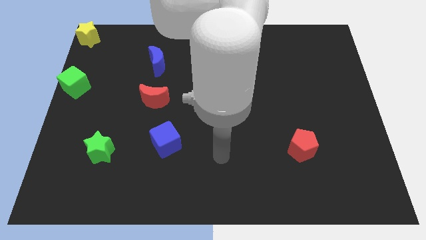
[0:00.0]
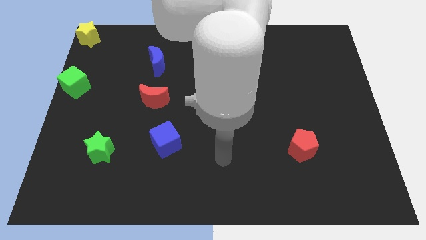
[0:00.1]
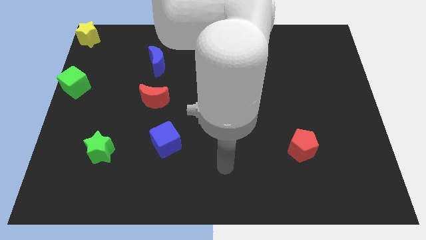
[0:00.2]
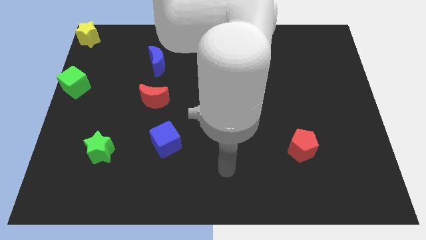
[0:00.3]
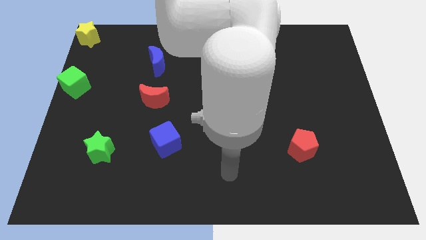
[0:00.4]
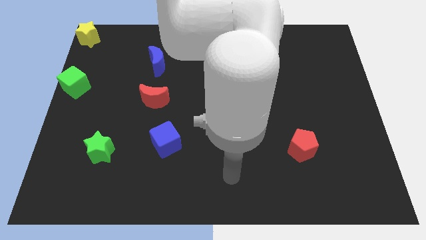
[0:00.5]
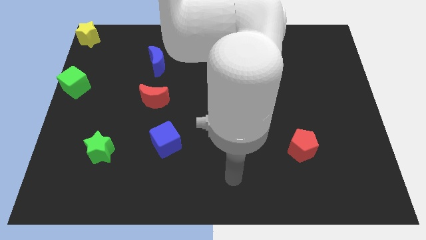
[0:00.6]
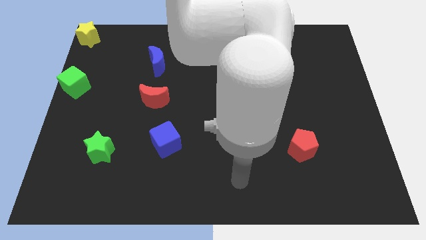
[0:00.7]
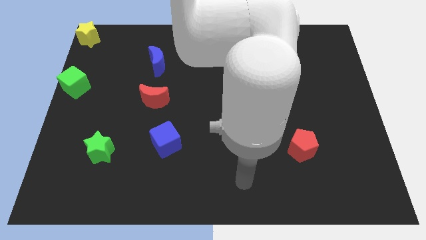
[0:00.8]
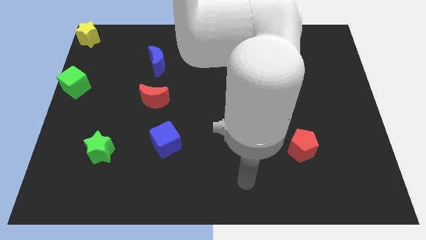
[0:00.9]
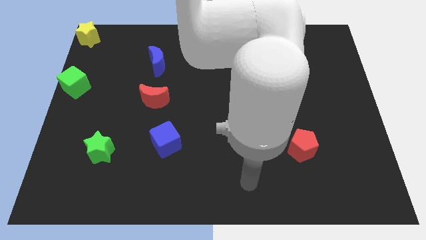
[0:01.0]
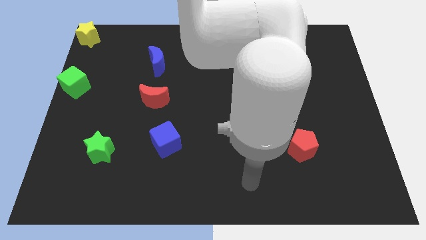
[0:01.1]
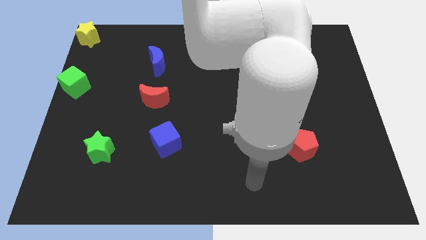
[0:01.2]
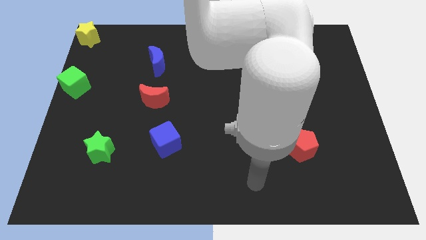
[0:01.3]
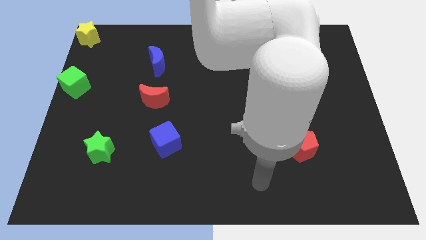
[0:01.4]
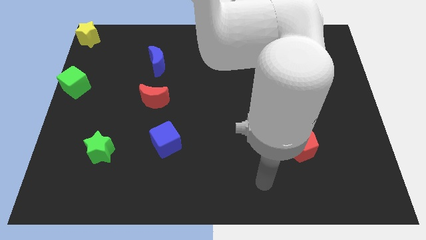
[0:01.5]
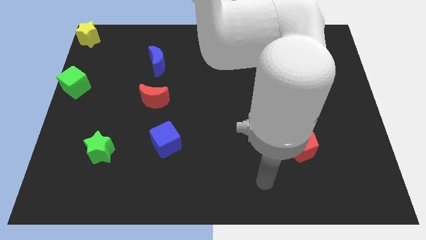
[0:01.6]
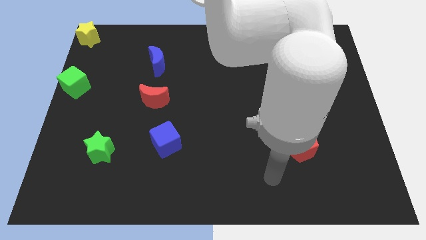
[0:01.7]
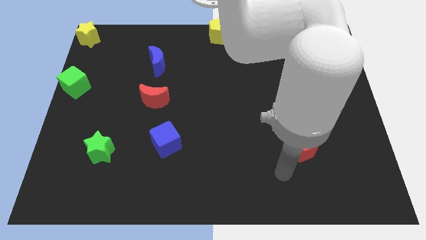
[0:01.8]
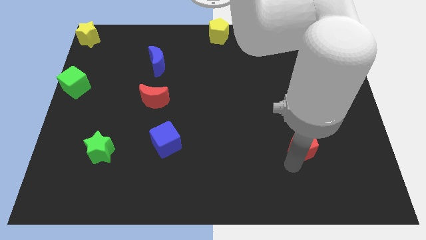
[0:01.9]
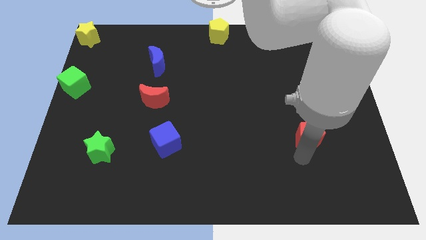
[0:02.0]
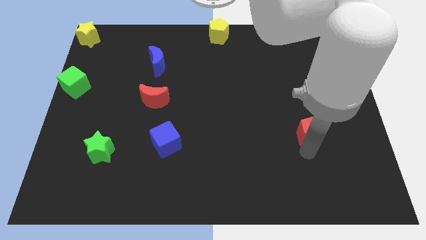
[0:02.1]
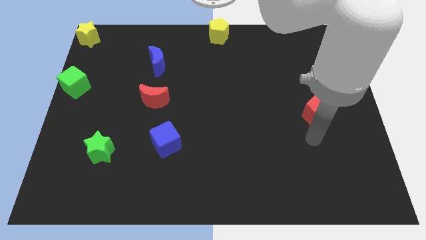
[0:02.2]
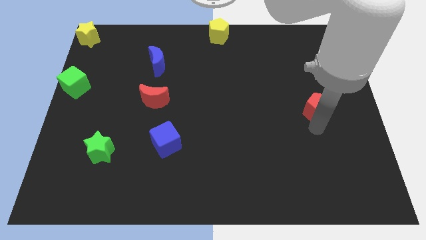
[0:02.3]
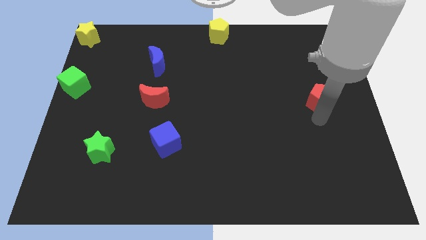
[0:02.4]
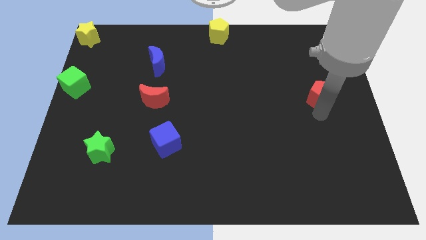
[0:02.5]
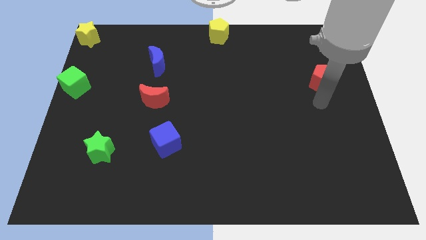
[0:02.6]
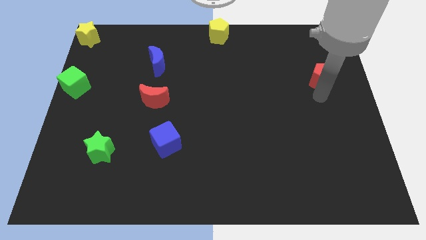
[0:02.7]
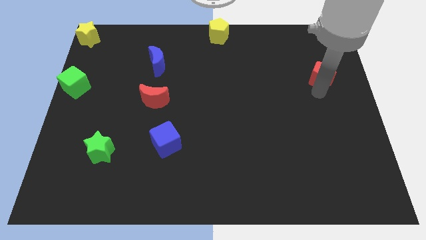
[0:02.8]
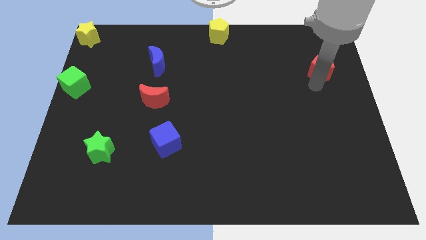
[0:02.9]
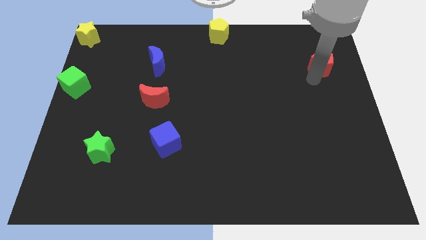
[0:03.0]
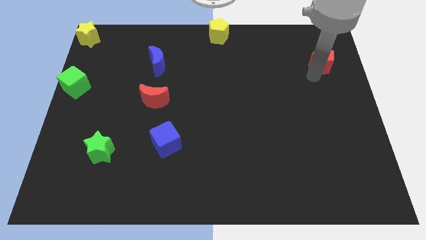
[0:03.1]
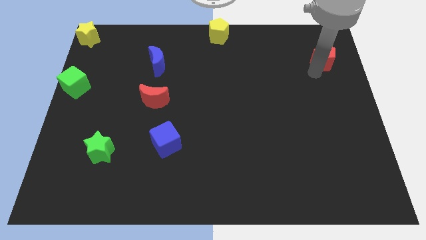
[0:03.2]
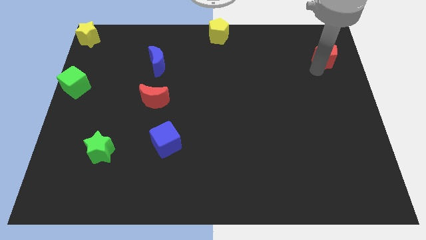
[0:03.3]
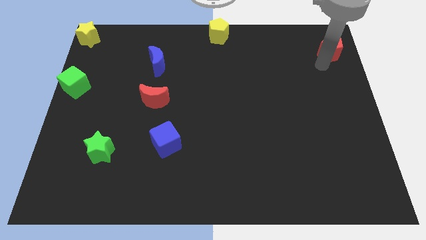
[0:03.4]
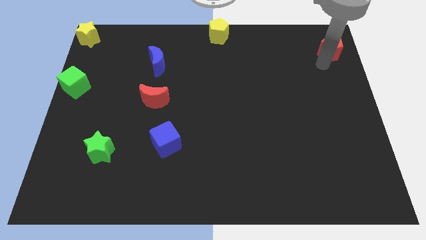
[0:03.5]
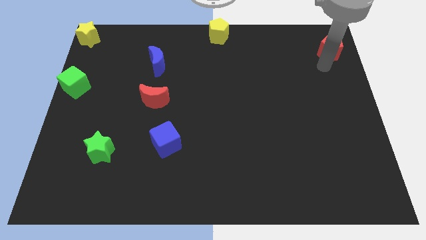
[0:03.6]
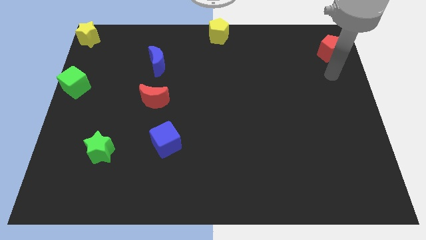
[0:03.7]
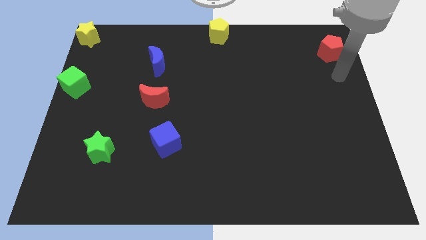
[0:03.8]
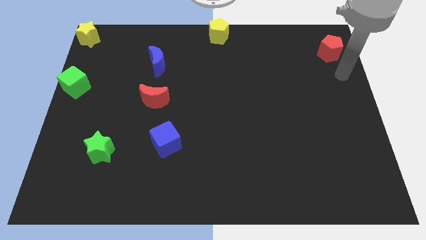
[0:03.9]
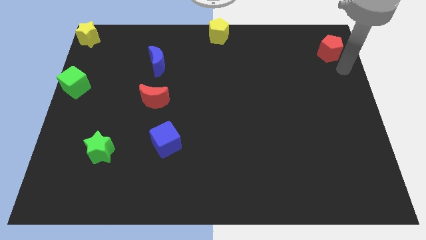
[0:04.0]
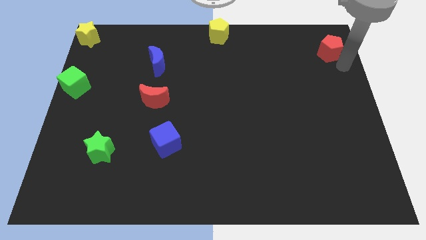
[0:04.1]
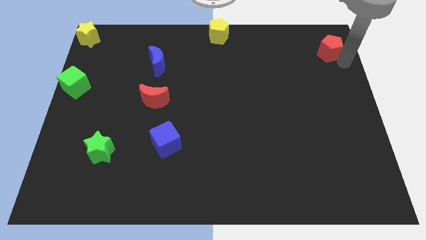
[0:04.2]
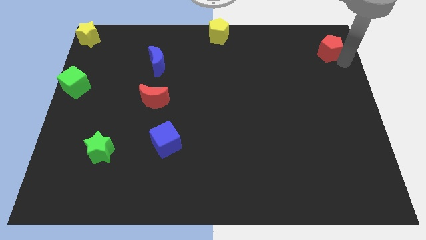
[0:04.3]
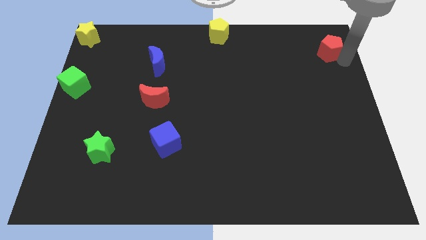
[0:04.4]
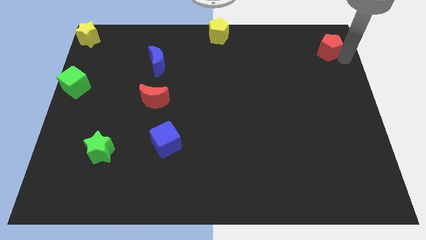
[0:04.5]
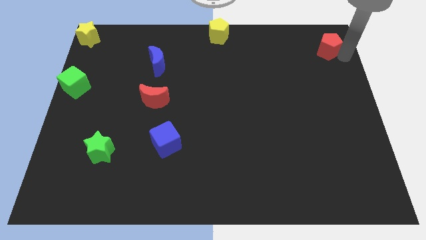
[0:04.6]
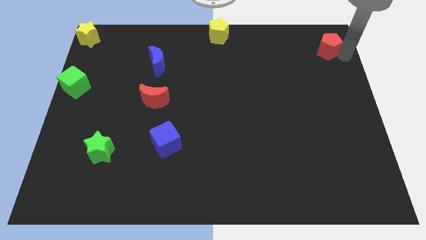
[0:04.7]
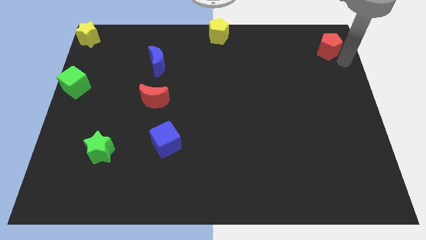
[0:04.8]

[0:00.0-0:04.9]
push the red pentagon to the top right corner of the board

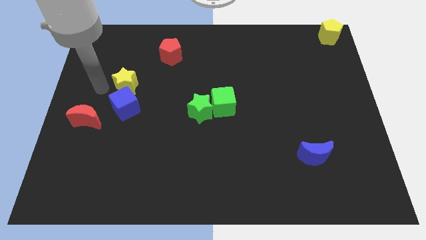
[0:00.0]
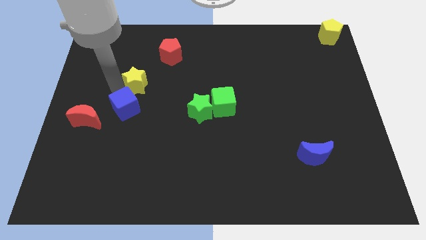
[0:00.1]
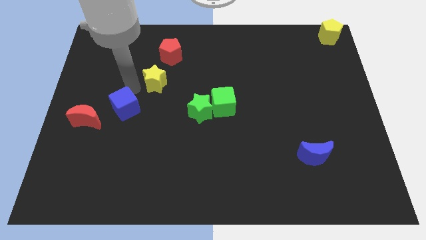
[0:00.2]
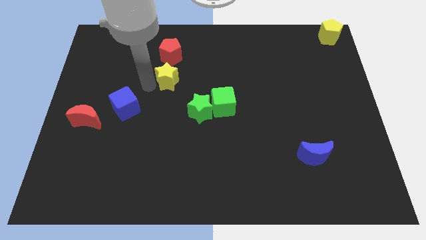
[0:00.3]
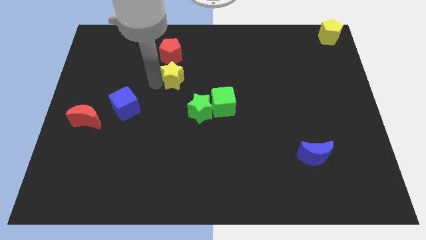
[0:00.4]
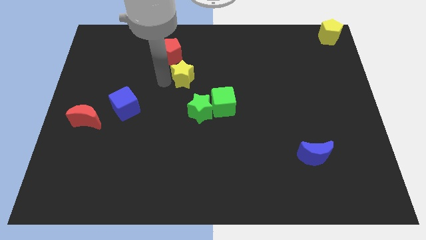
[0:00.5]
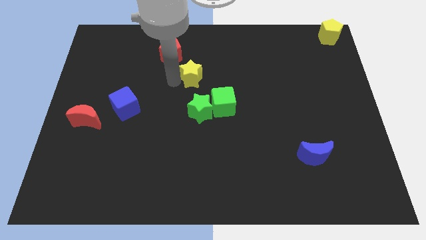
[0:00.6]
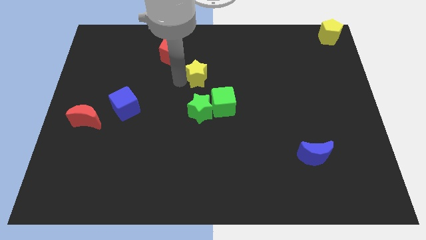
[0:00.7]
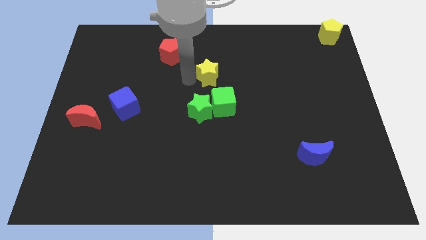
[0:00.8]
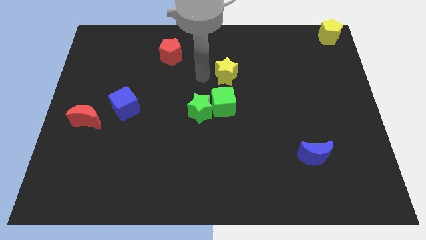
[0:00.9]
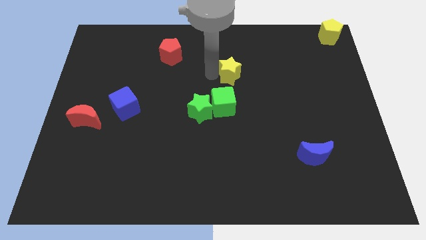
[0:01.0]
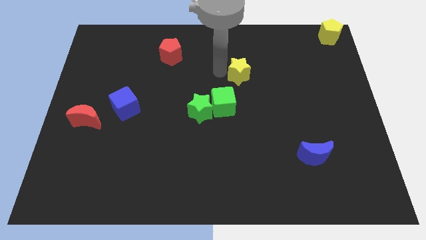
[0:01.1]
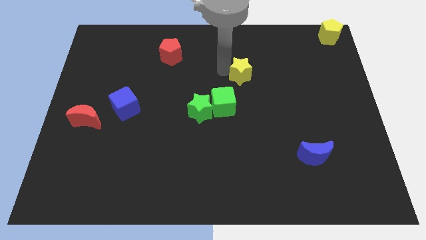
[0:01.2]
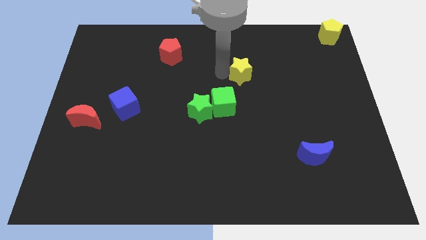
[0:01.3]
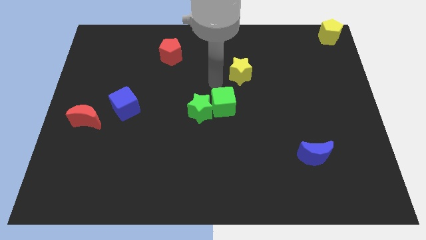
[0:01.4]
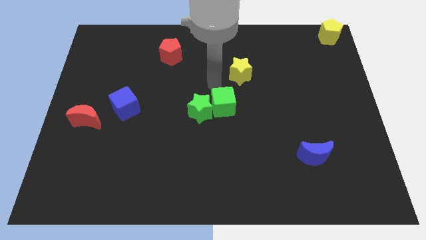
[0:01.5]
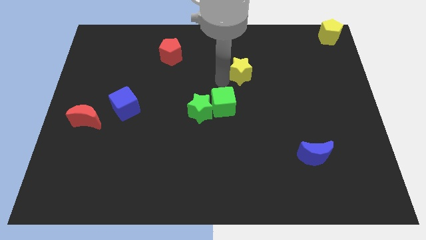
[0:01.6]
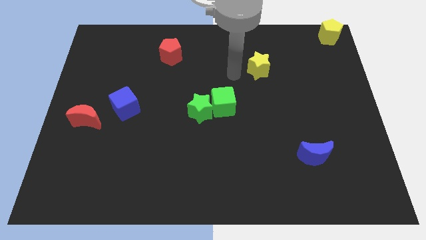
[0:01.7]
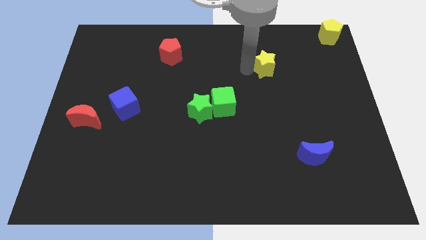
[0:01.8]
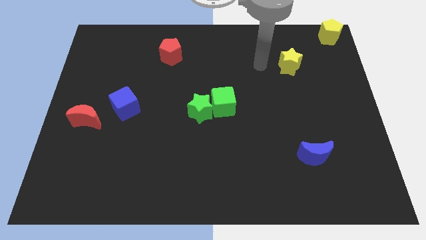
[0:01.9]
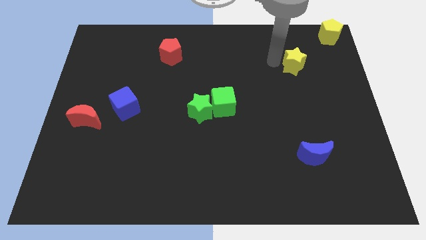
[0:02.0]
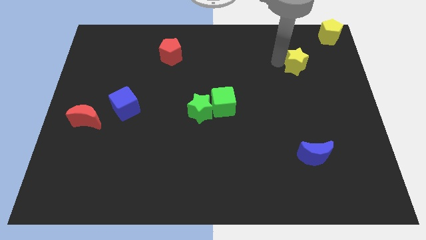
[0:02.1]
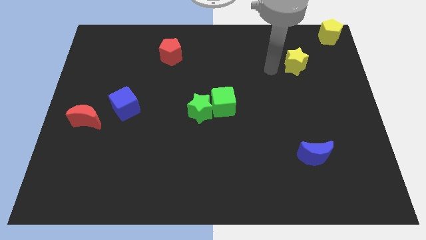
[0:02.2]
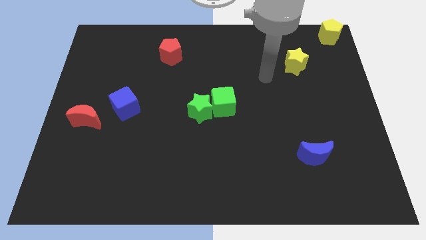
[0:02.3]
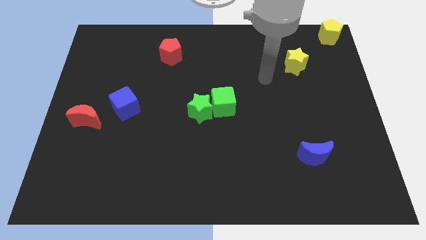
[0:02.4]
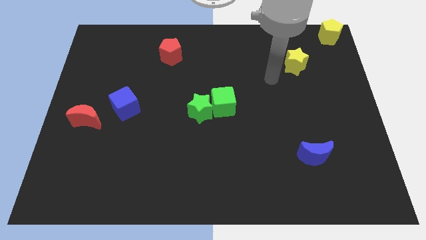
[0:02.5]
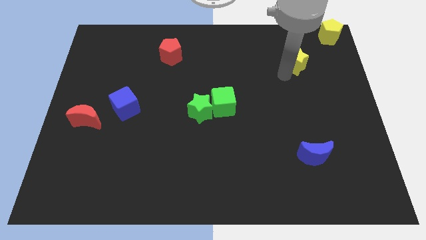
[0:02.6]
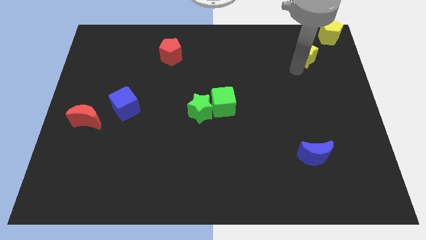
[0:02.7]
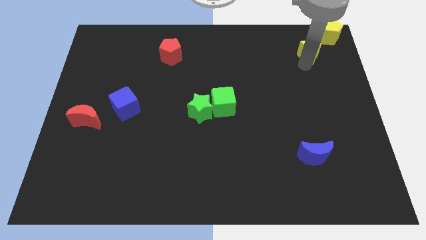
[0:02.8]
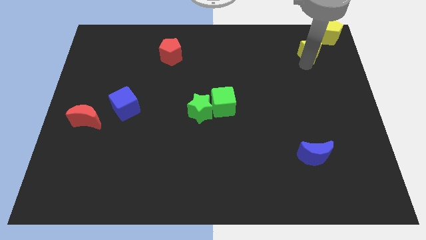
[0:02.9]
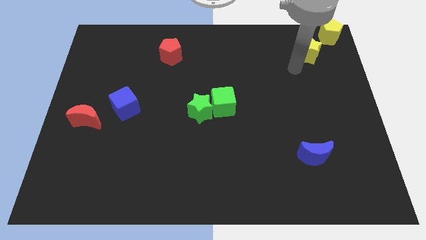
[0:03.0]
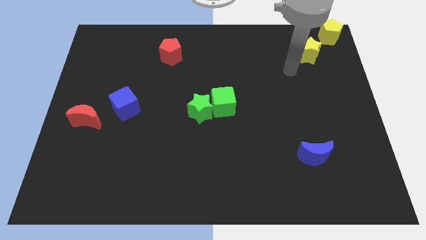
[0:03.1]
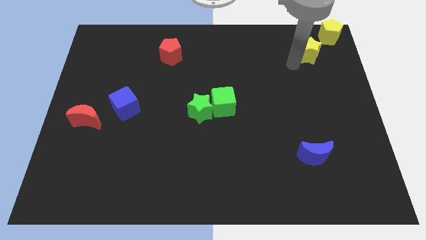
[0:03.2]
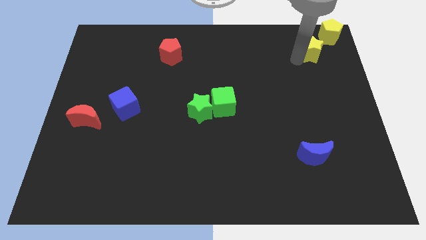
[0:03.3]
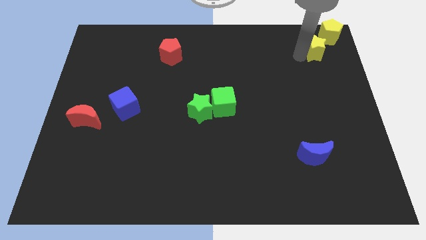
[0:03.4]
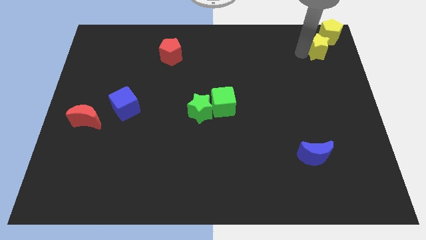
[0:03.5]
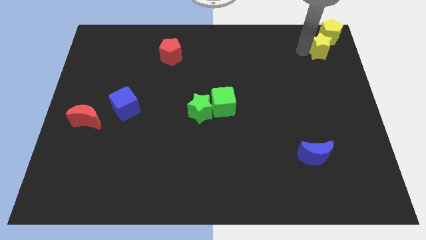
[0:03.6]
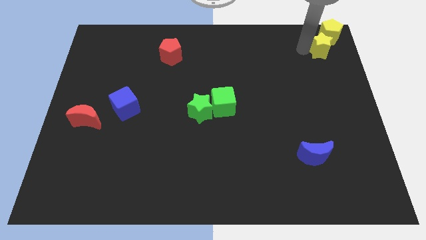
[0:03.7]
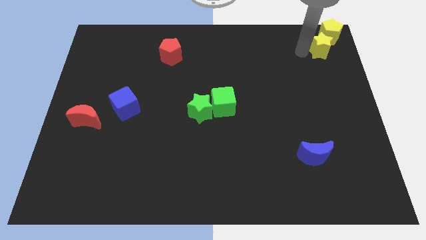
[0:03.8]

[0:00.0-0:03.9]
place the yellow star into the yellow pentagon
